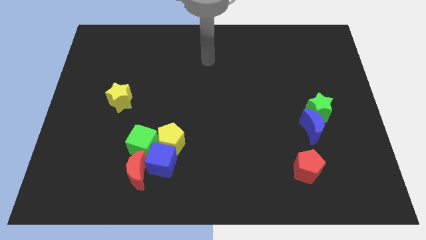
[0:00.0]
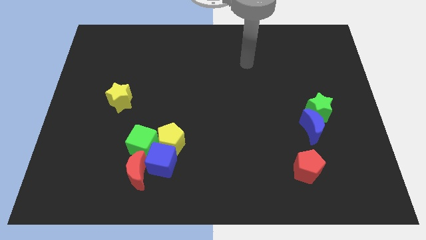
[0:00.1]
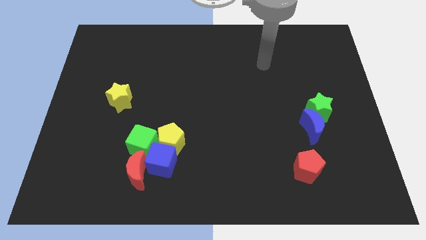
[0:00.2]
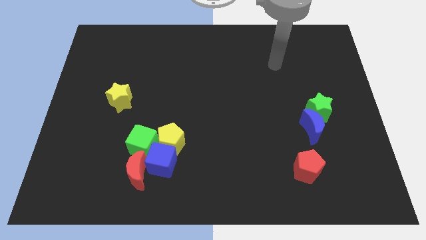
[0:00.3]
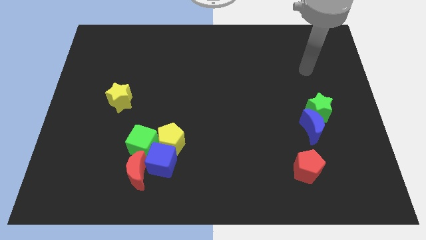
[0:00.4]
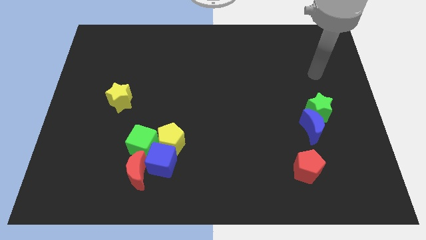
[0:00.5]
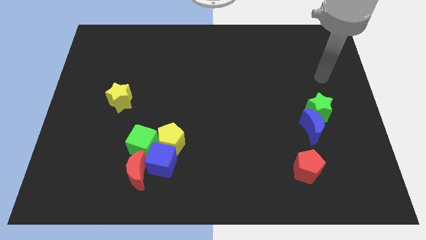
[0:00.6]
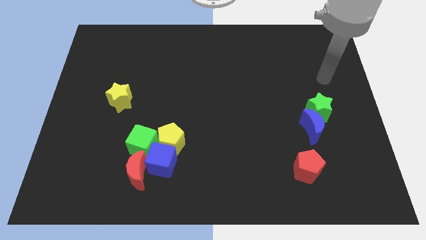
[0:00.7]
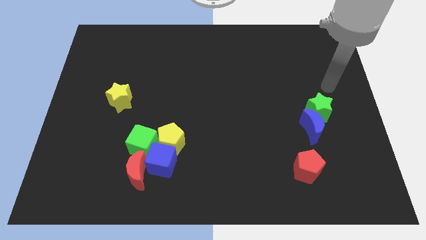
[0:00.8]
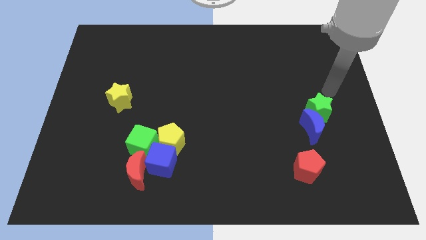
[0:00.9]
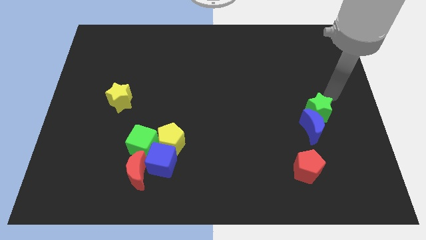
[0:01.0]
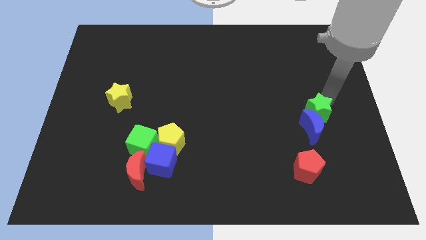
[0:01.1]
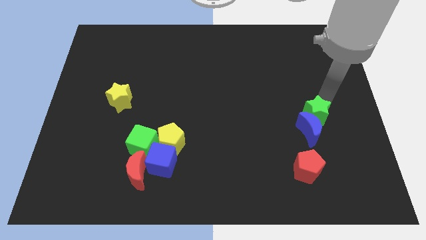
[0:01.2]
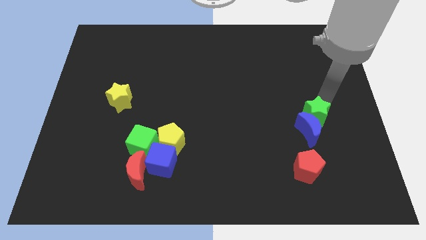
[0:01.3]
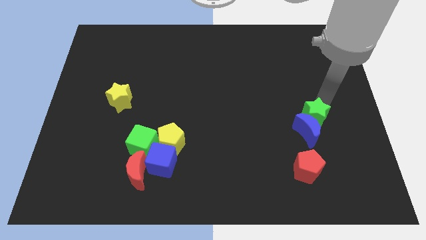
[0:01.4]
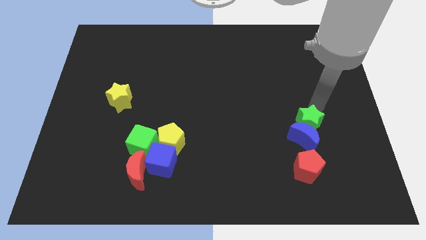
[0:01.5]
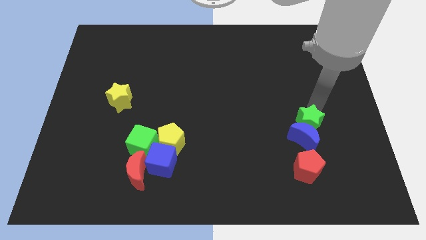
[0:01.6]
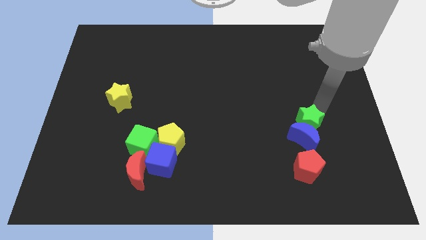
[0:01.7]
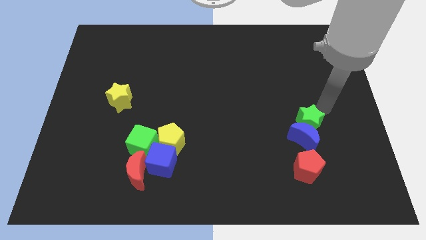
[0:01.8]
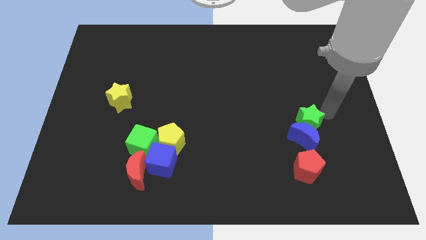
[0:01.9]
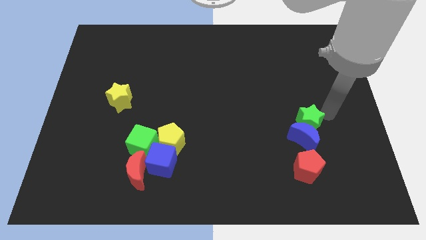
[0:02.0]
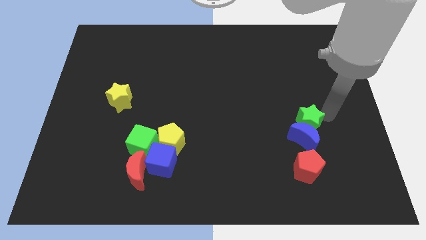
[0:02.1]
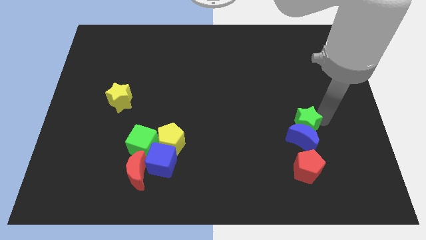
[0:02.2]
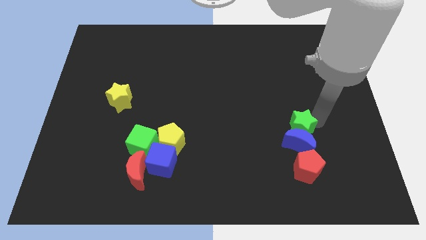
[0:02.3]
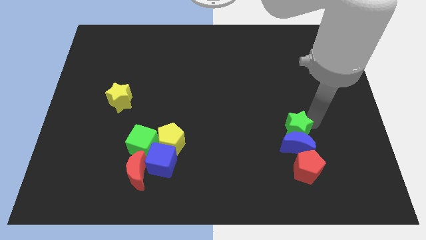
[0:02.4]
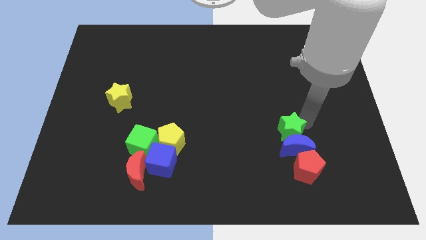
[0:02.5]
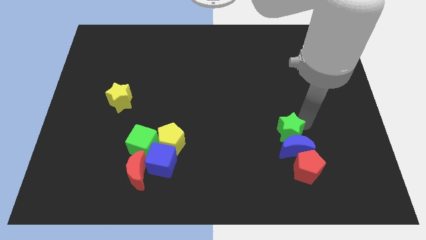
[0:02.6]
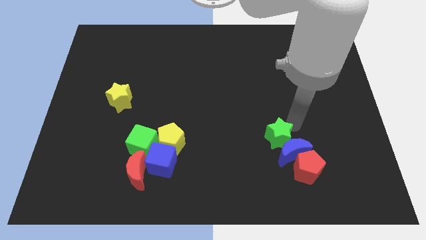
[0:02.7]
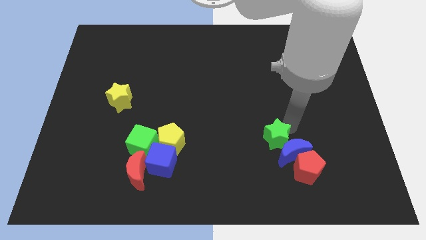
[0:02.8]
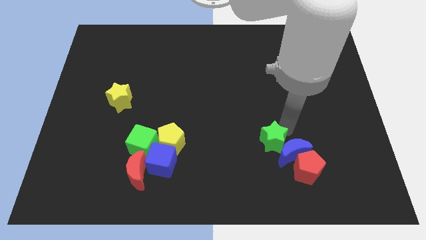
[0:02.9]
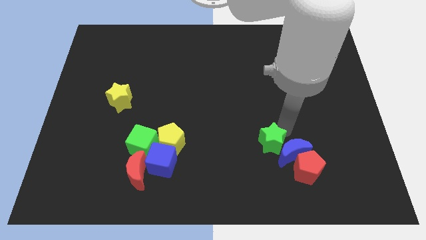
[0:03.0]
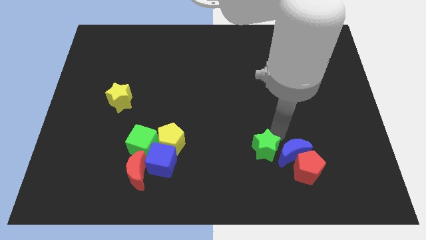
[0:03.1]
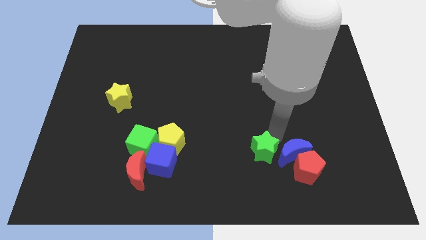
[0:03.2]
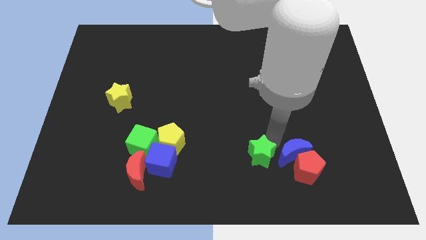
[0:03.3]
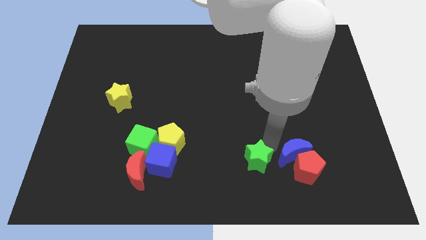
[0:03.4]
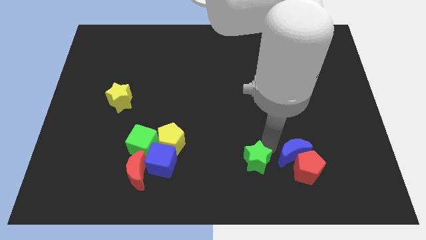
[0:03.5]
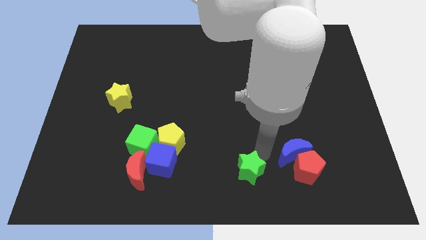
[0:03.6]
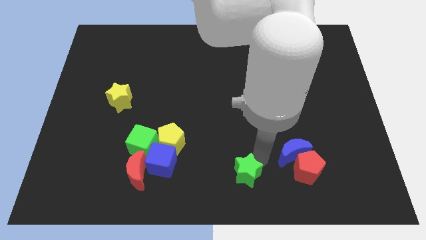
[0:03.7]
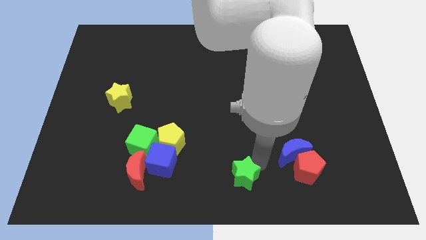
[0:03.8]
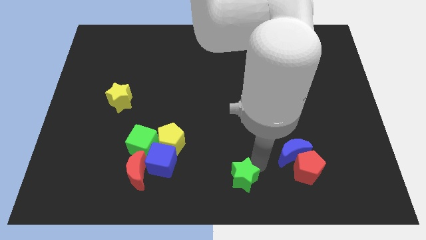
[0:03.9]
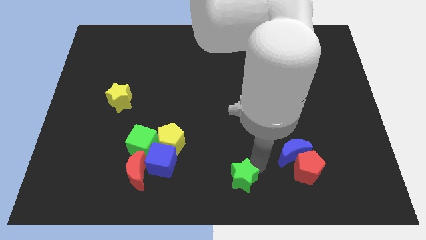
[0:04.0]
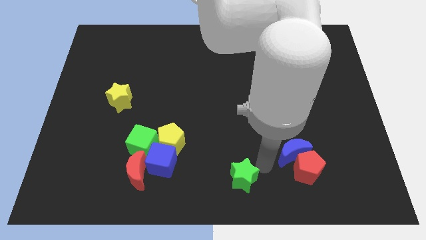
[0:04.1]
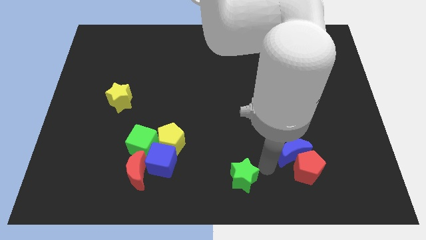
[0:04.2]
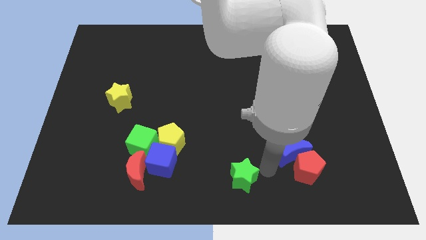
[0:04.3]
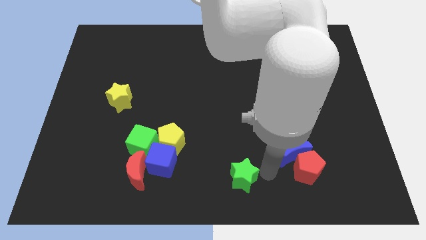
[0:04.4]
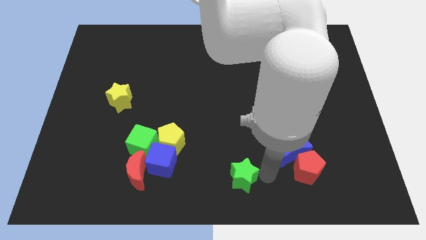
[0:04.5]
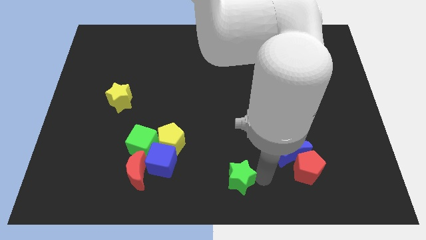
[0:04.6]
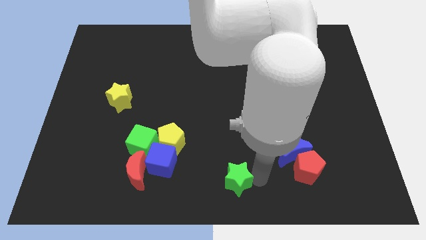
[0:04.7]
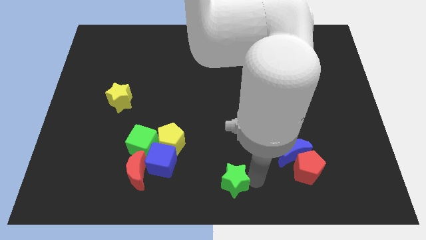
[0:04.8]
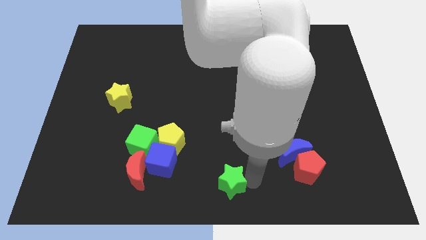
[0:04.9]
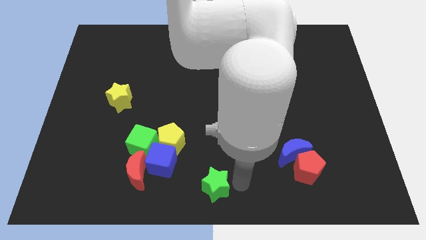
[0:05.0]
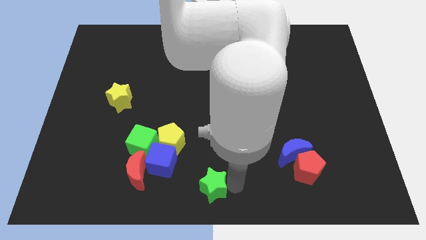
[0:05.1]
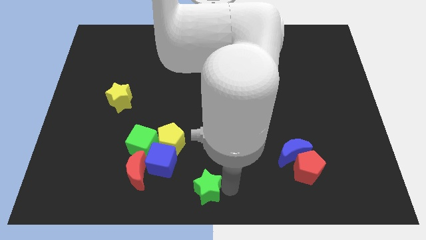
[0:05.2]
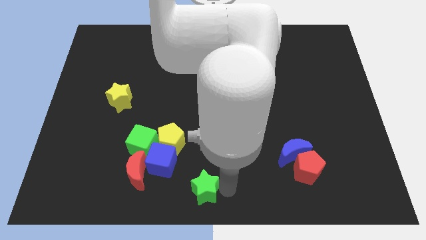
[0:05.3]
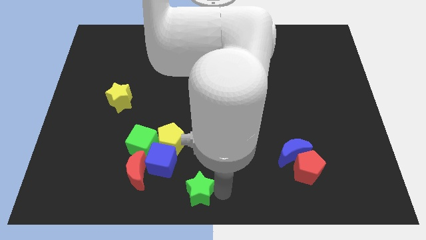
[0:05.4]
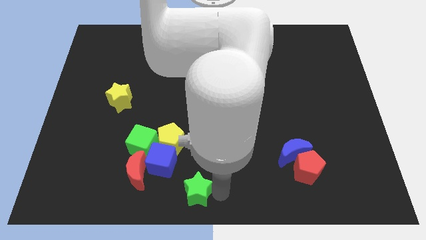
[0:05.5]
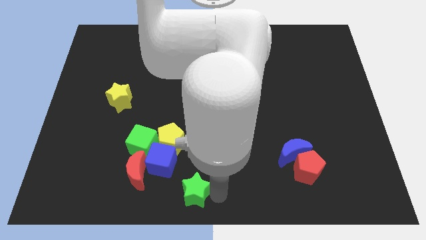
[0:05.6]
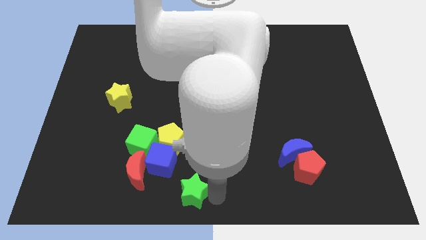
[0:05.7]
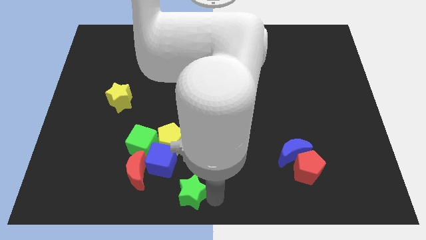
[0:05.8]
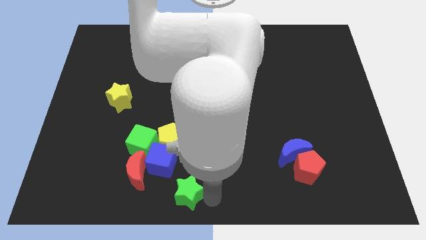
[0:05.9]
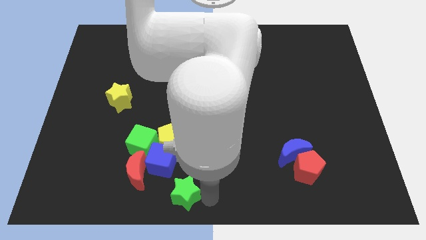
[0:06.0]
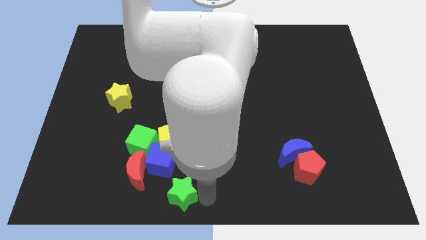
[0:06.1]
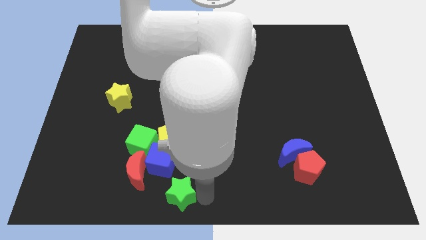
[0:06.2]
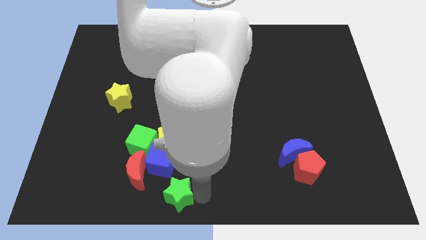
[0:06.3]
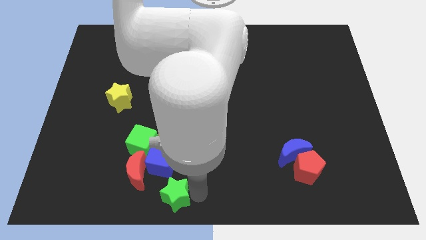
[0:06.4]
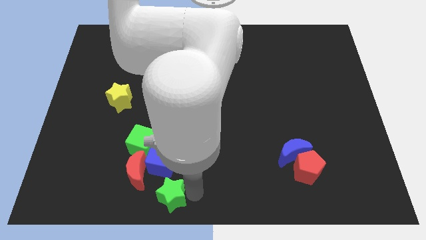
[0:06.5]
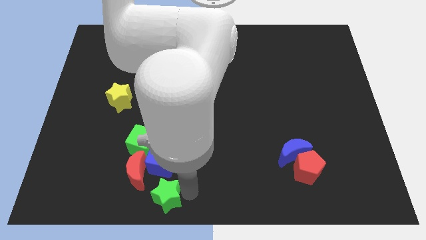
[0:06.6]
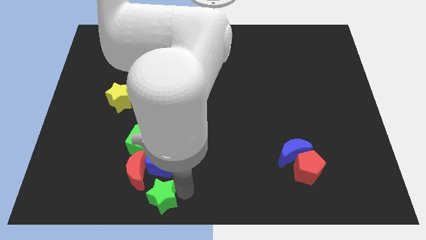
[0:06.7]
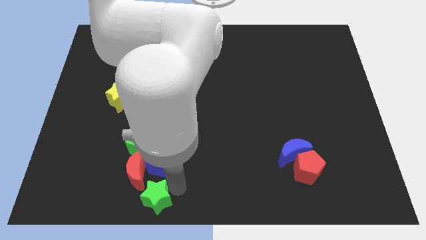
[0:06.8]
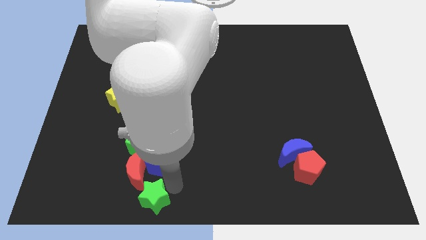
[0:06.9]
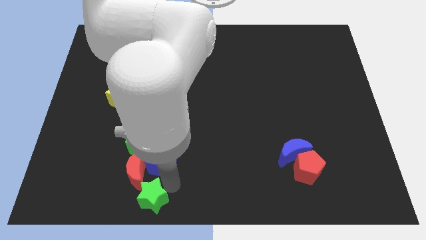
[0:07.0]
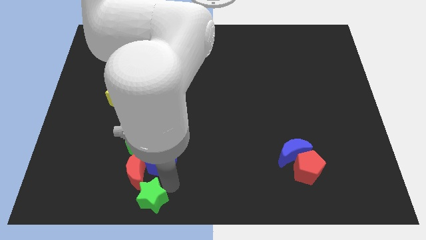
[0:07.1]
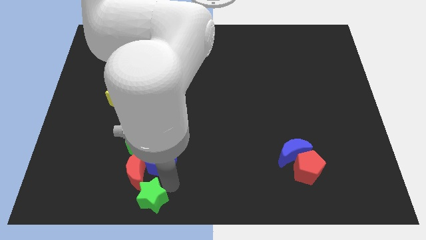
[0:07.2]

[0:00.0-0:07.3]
move the green star next to the red moon

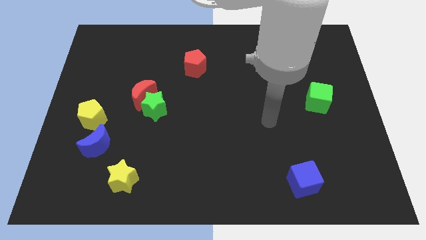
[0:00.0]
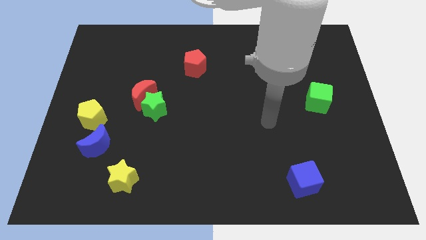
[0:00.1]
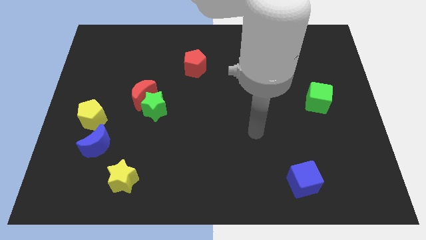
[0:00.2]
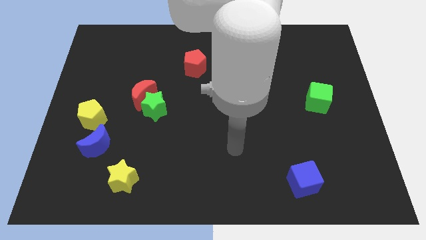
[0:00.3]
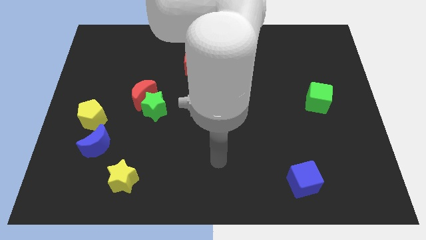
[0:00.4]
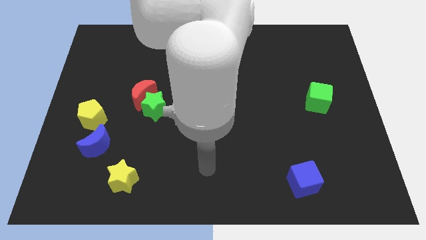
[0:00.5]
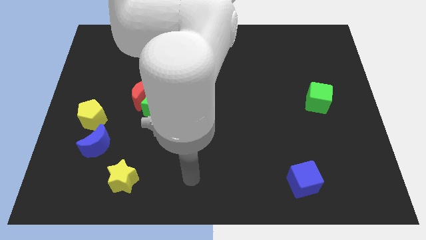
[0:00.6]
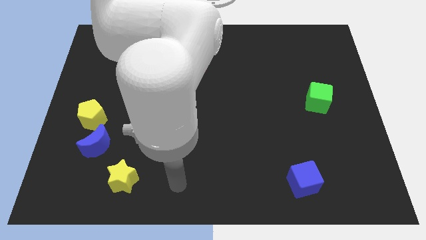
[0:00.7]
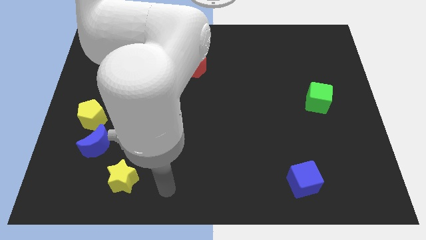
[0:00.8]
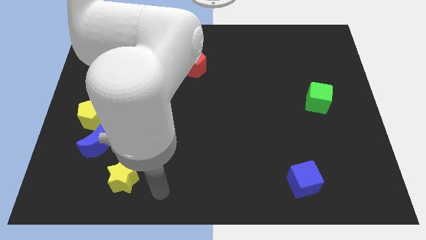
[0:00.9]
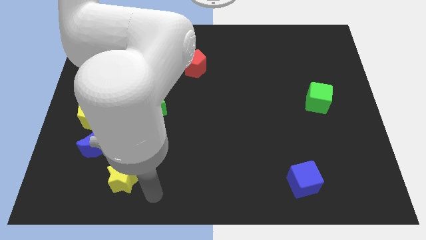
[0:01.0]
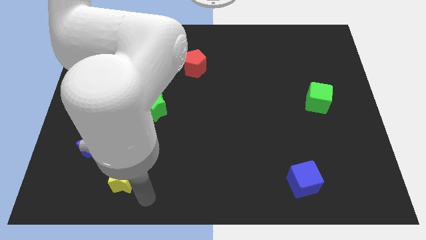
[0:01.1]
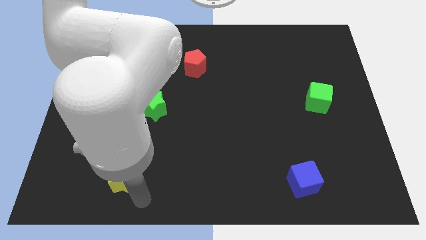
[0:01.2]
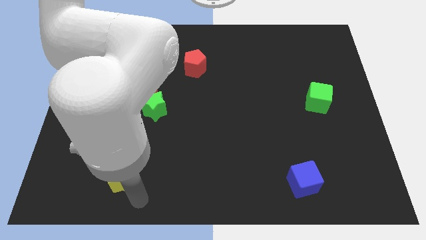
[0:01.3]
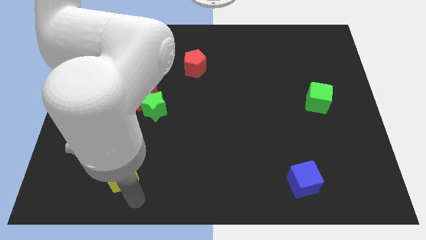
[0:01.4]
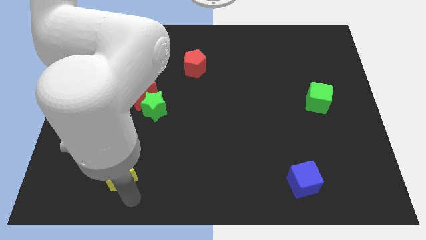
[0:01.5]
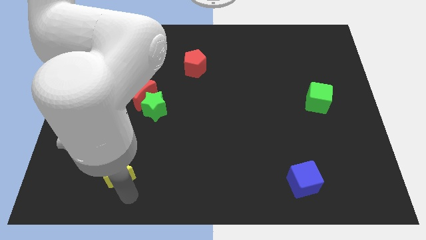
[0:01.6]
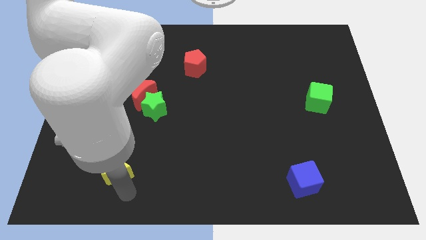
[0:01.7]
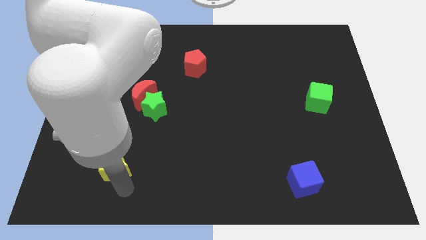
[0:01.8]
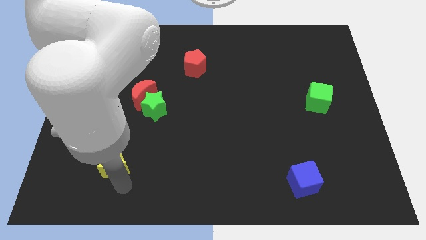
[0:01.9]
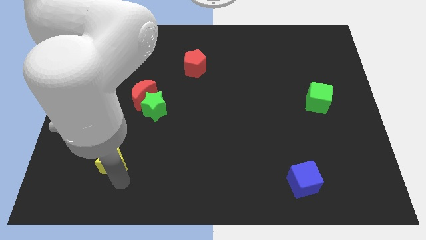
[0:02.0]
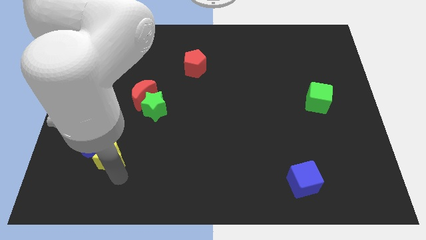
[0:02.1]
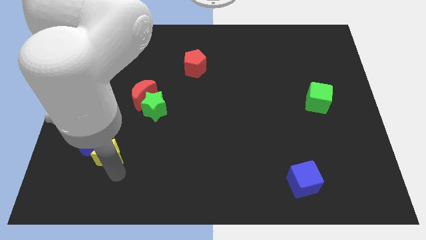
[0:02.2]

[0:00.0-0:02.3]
push the yellow star towards the blue moon
